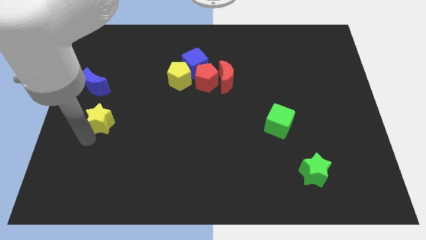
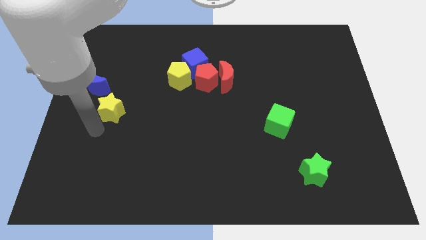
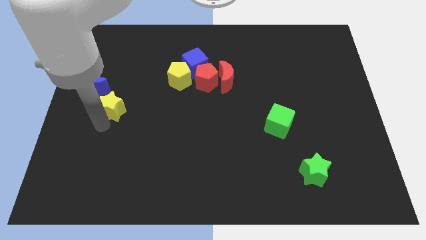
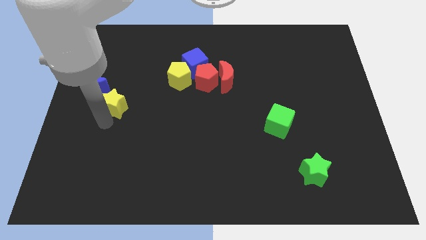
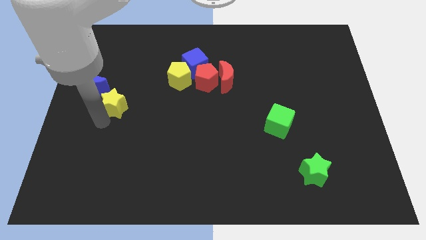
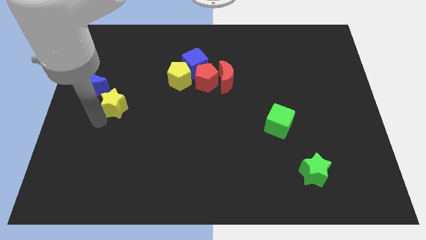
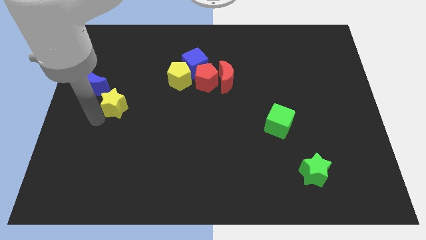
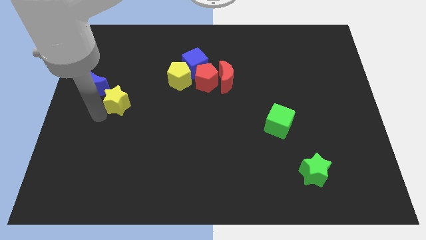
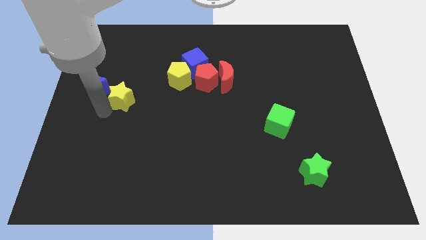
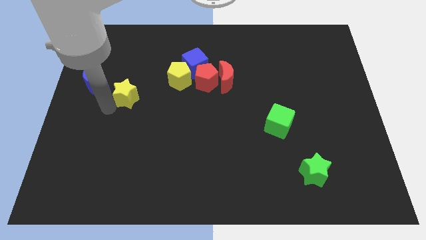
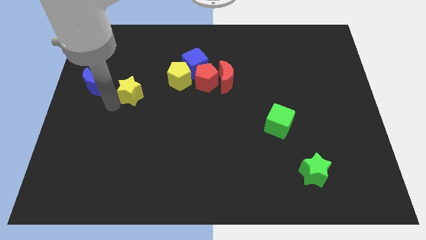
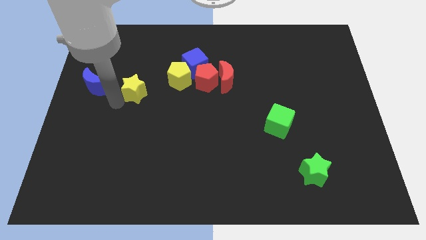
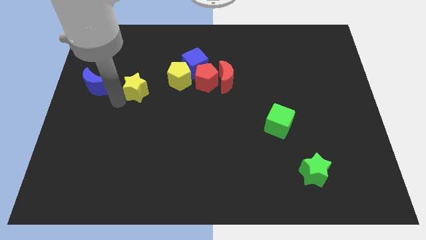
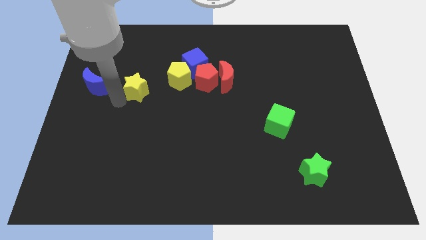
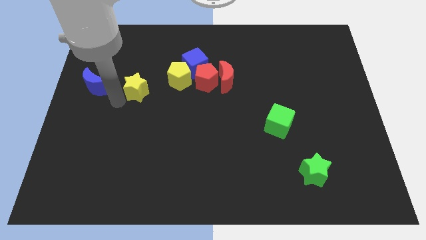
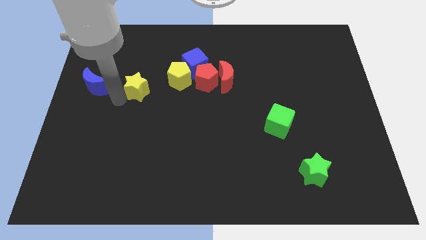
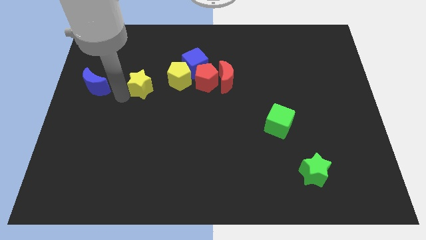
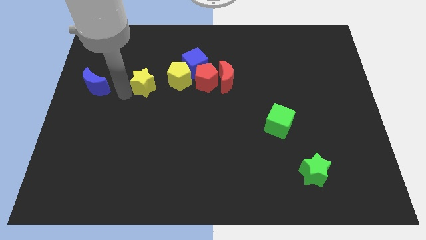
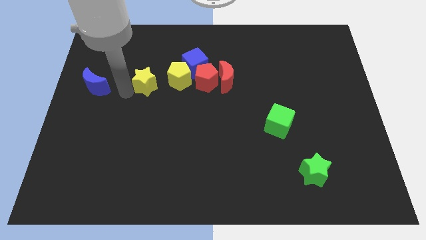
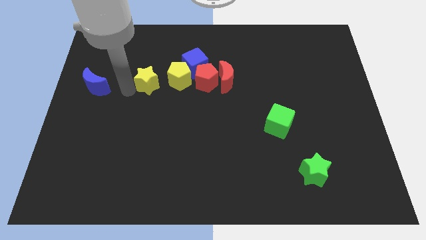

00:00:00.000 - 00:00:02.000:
place the yellow star in between the yellow pentagon and blue moon

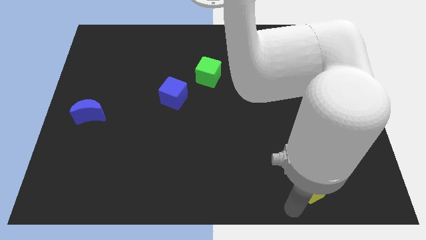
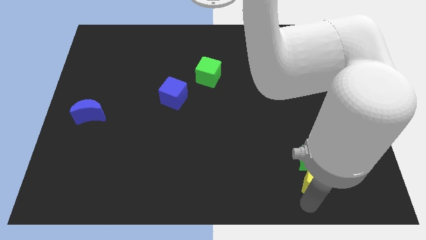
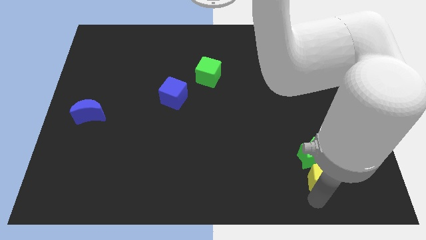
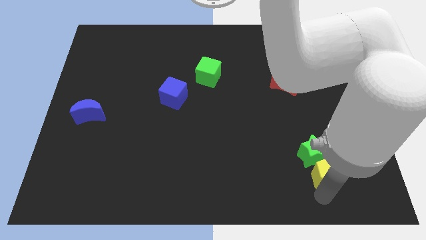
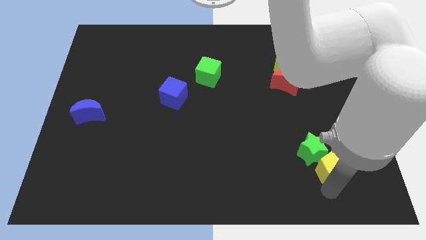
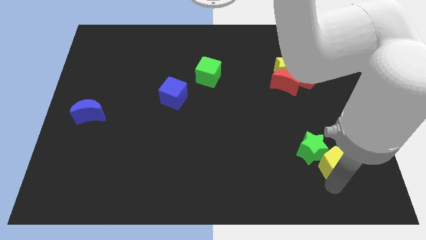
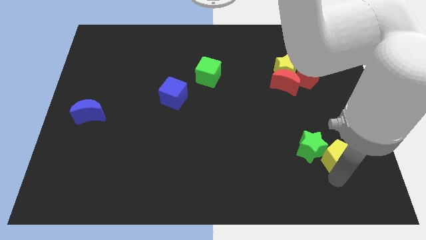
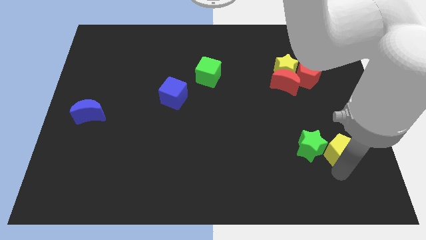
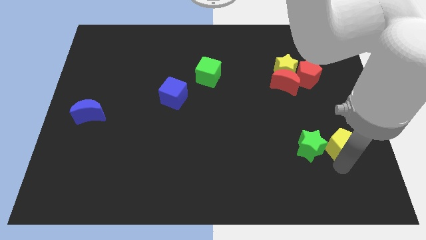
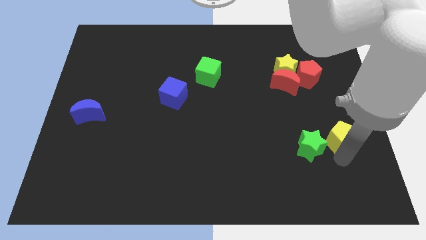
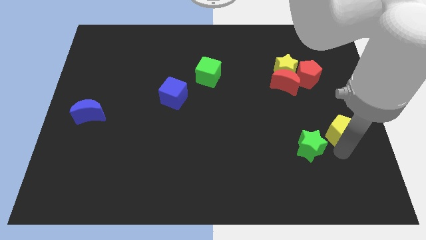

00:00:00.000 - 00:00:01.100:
place yellow pentagon to the right of green star

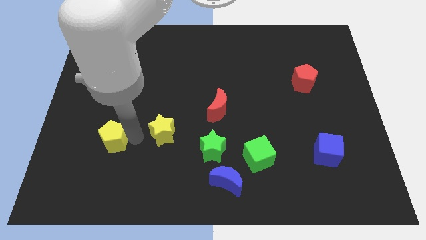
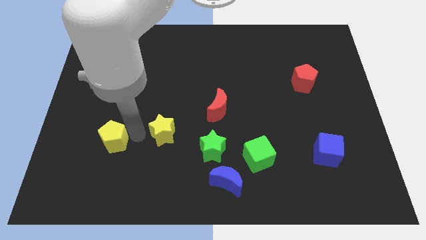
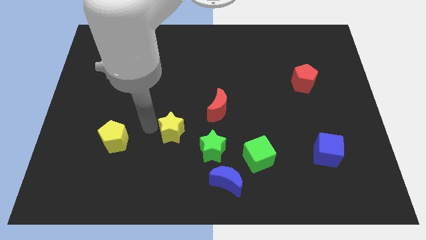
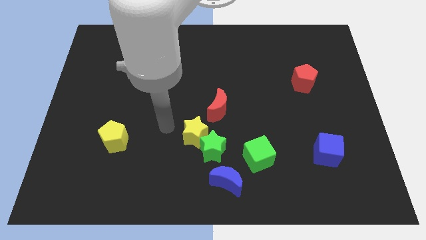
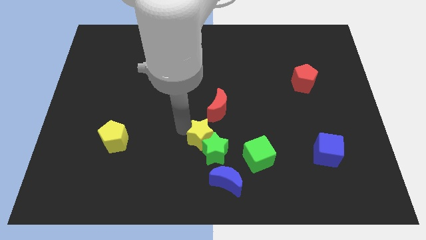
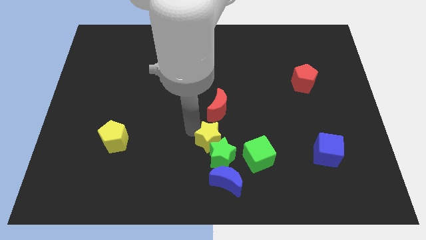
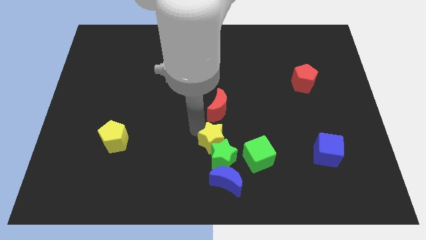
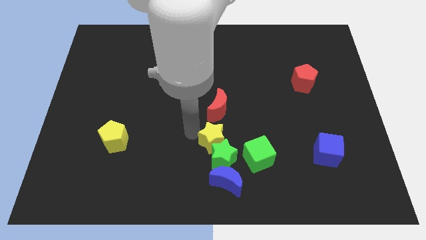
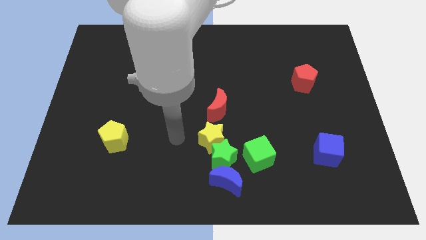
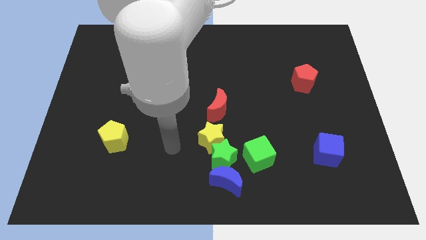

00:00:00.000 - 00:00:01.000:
move the yellow star to the bottom of the red crescent

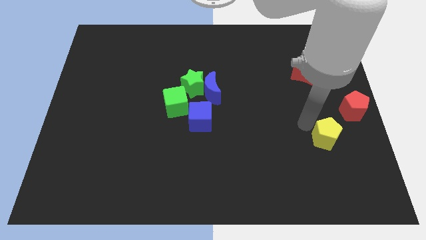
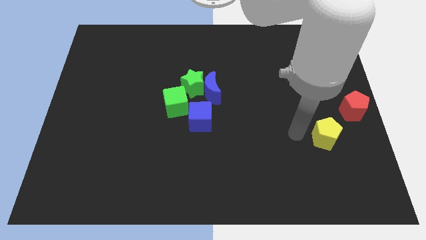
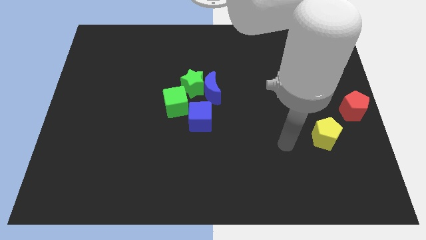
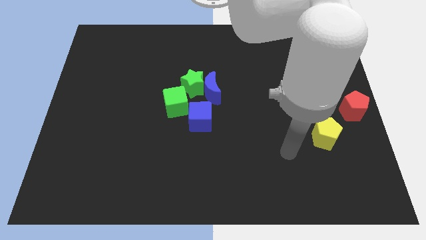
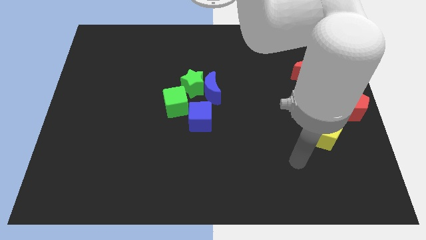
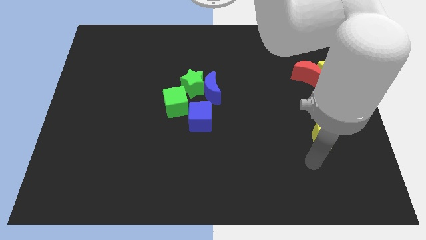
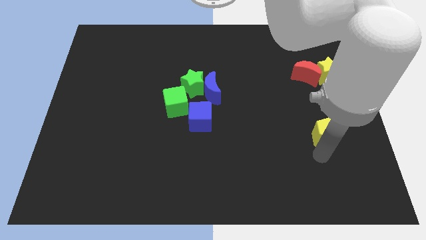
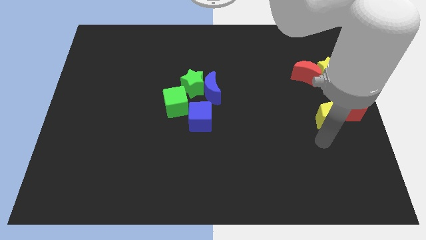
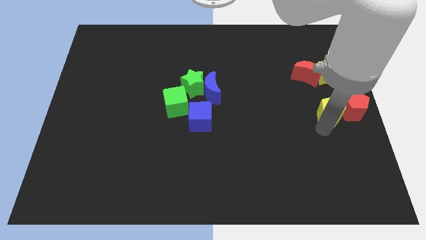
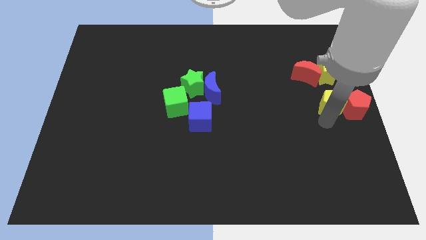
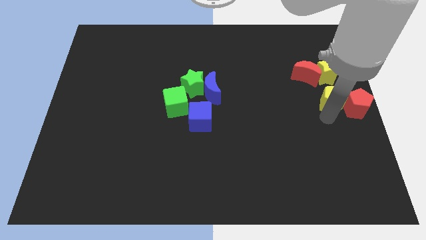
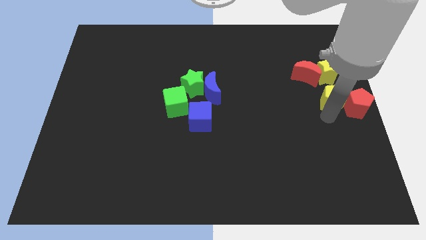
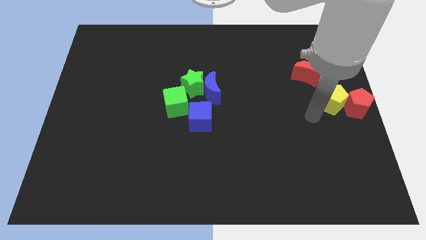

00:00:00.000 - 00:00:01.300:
move yellow pentagon left beside the red pentagon

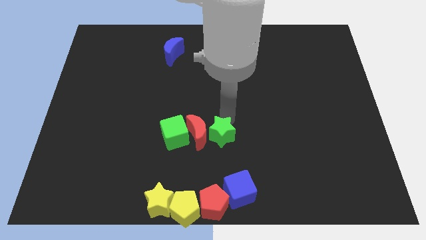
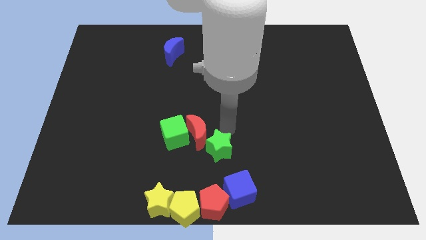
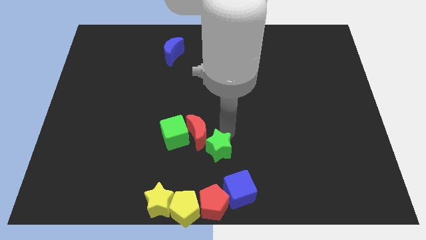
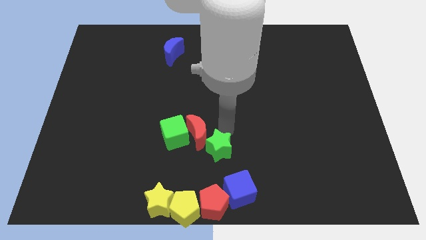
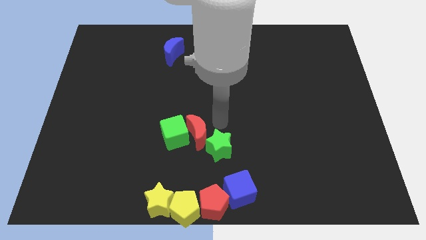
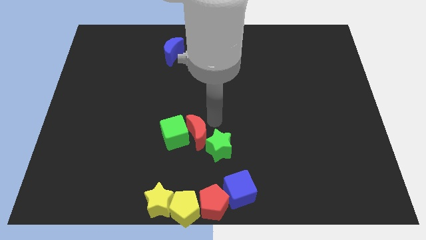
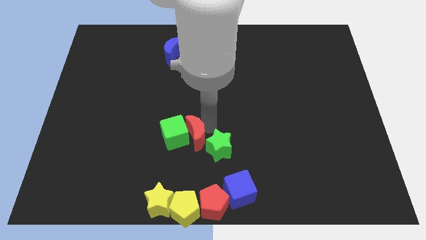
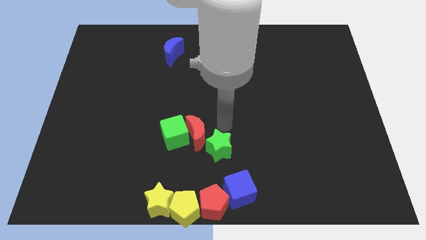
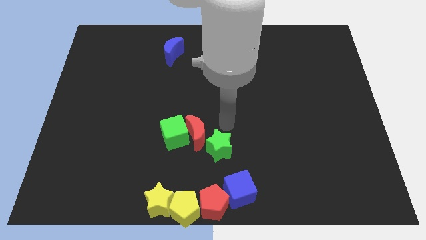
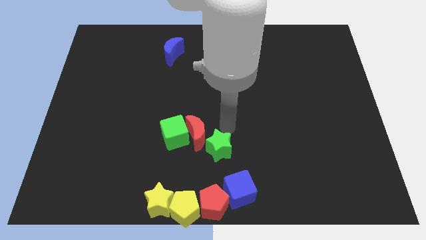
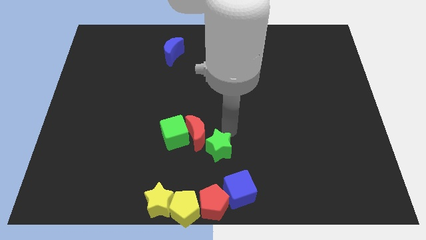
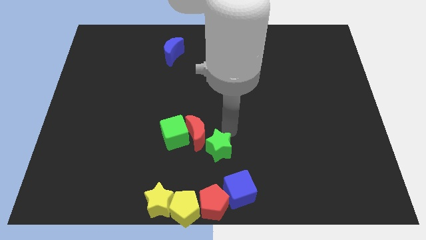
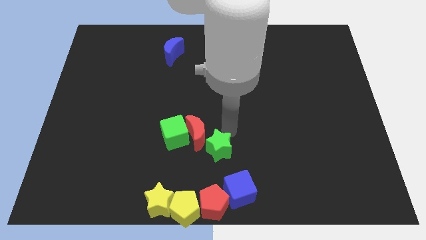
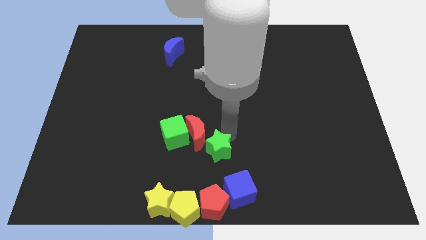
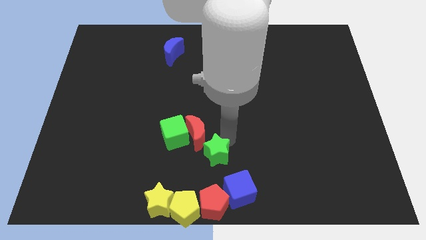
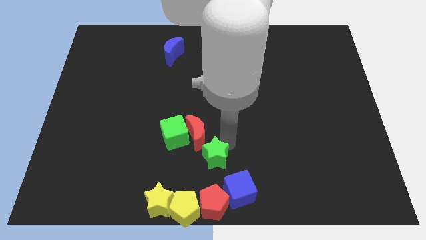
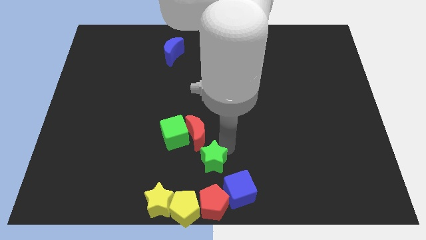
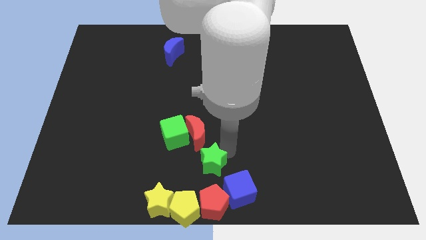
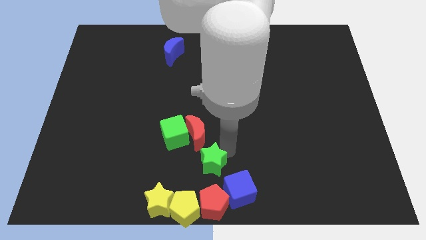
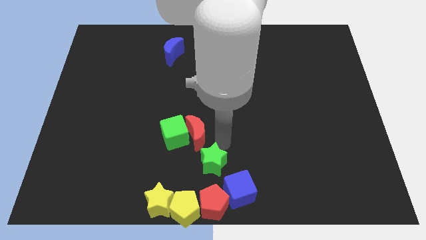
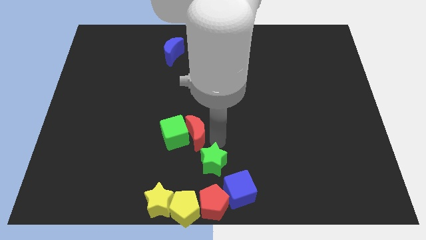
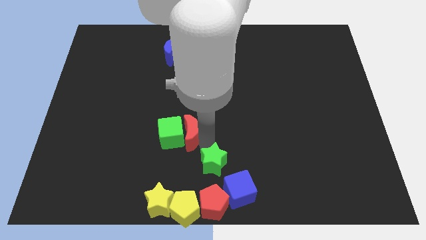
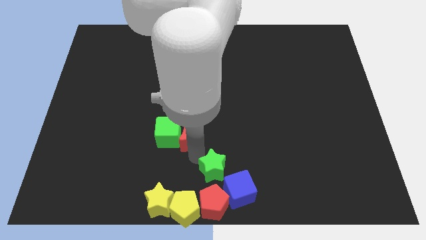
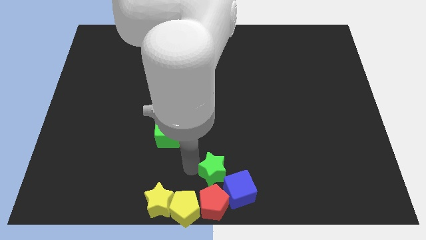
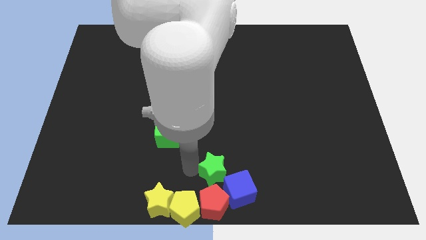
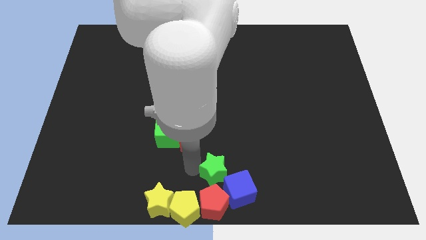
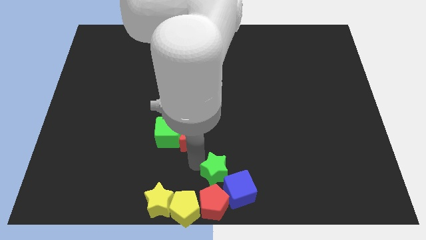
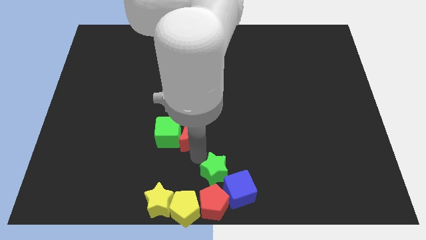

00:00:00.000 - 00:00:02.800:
push the green star to the top of the red pentagon

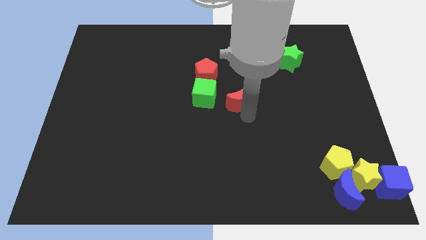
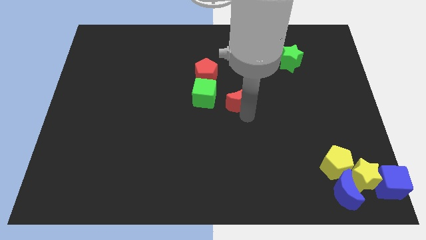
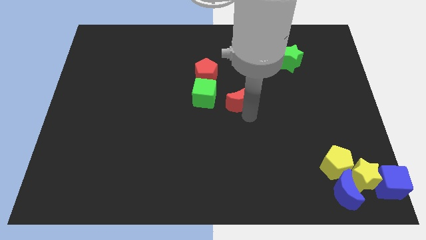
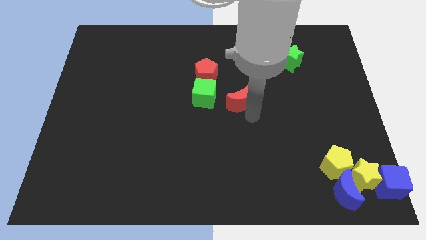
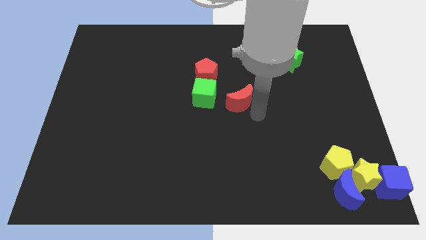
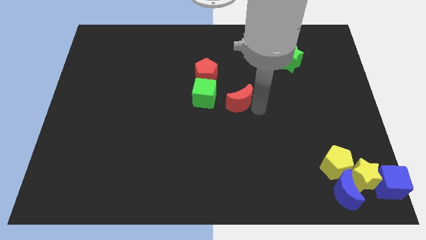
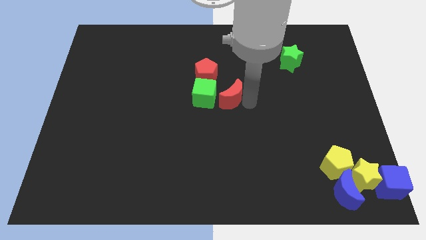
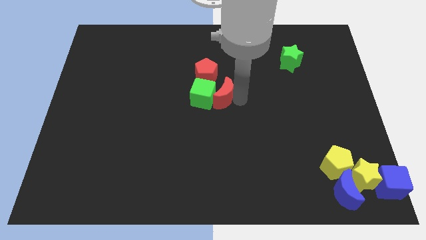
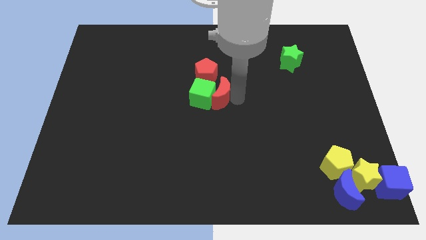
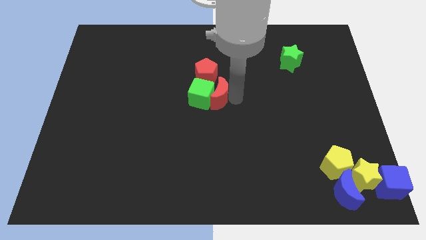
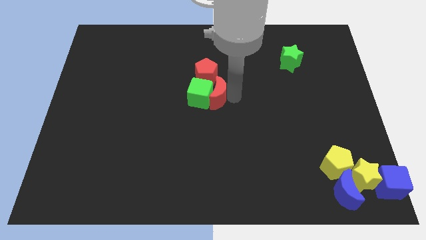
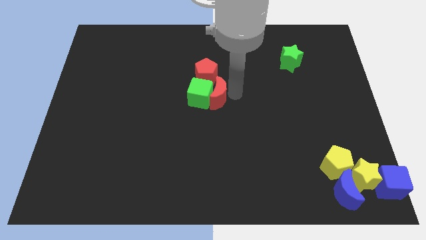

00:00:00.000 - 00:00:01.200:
push the red moon towards center
